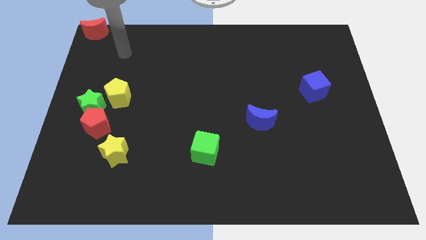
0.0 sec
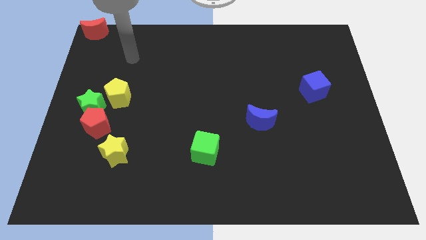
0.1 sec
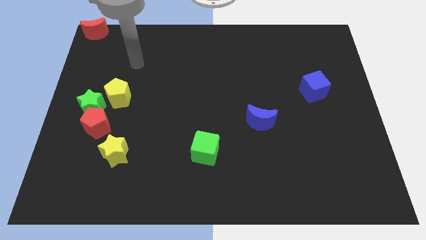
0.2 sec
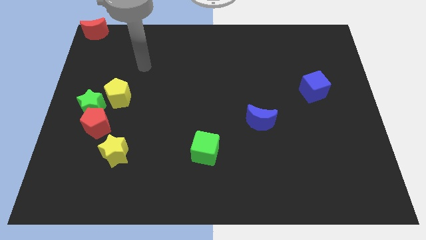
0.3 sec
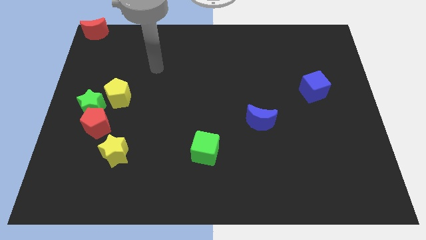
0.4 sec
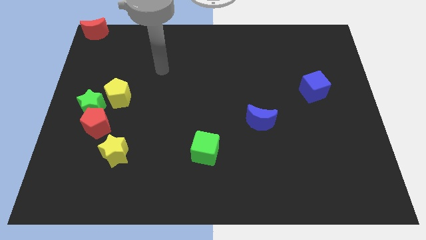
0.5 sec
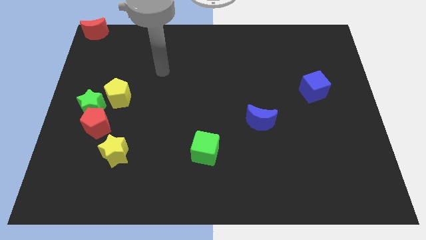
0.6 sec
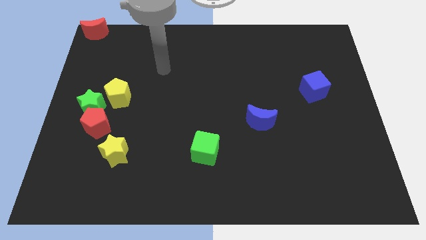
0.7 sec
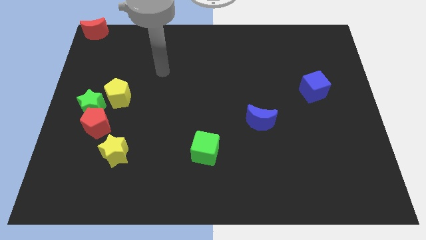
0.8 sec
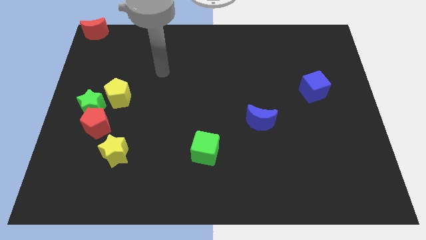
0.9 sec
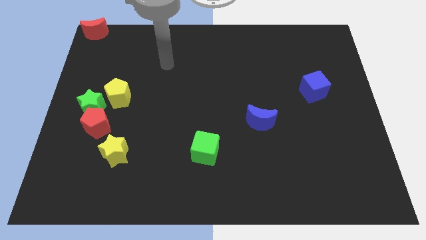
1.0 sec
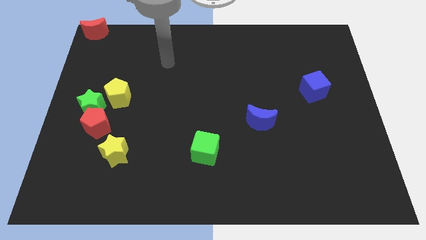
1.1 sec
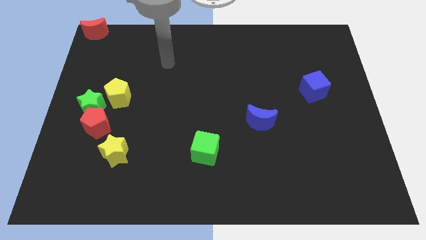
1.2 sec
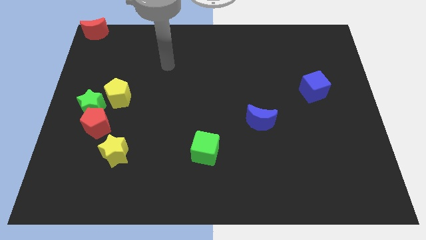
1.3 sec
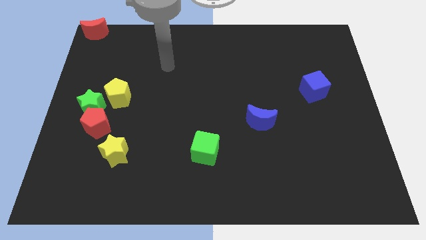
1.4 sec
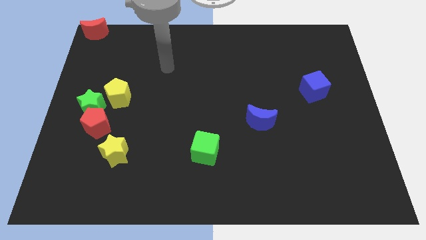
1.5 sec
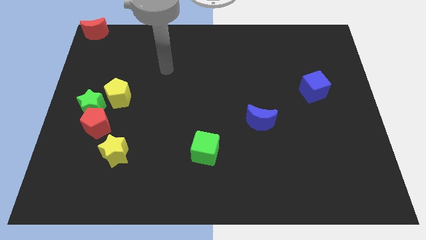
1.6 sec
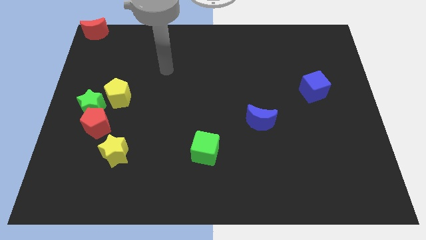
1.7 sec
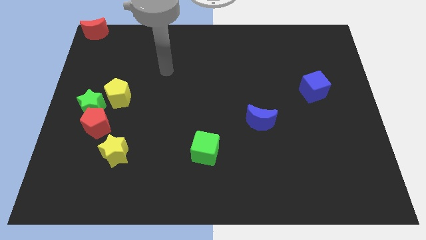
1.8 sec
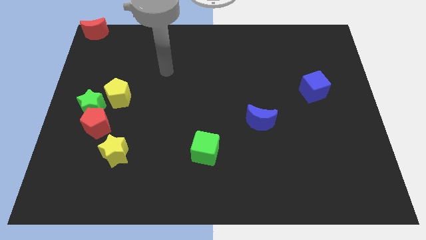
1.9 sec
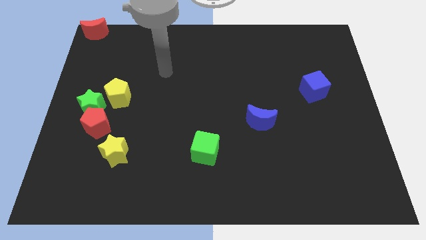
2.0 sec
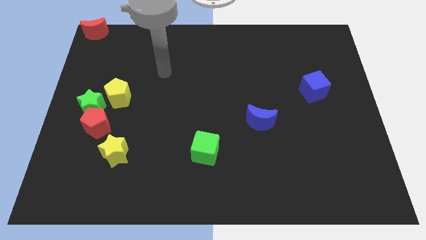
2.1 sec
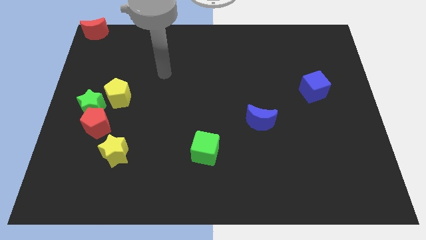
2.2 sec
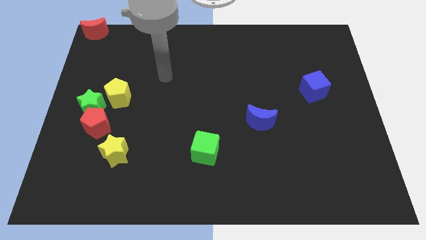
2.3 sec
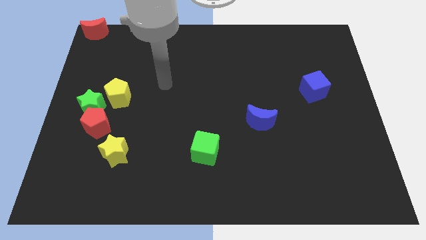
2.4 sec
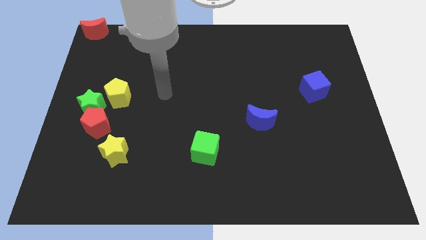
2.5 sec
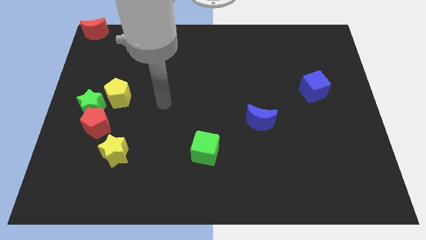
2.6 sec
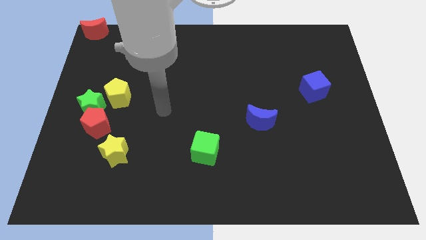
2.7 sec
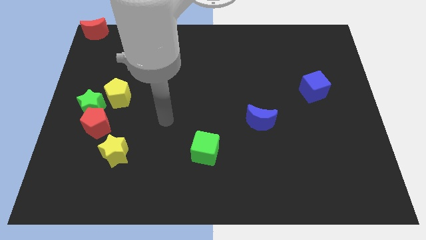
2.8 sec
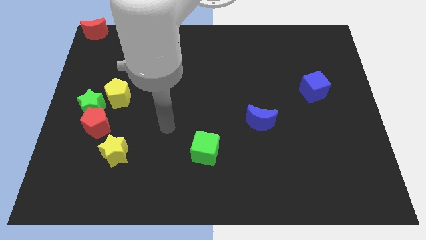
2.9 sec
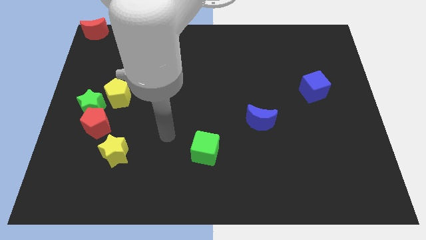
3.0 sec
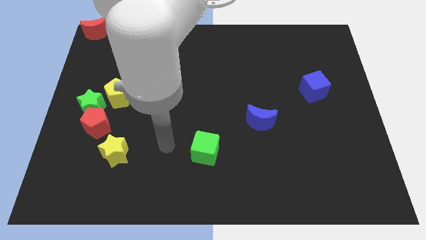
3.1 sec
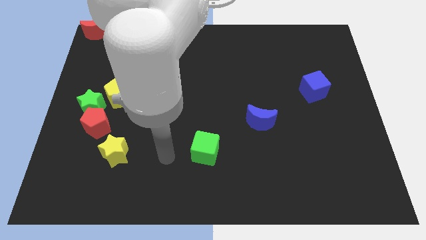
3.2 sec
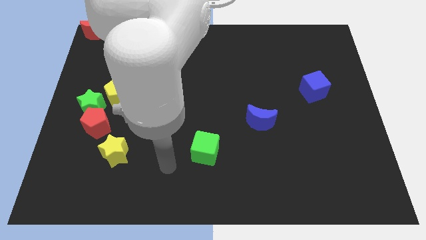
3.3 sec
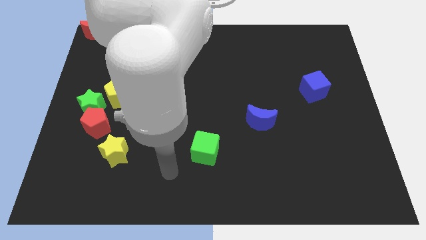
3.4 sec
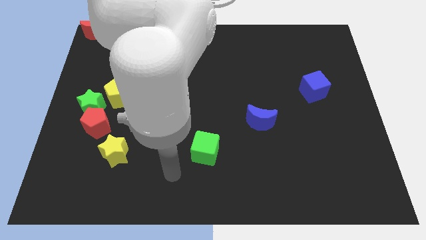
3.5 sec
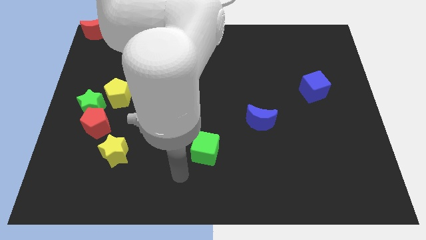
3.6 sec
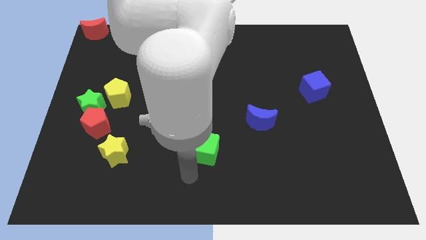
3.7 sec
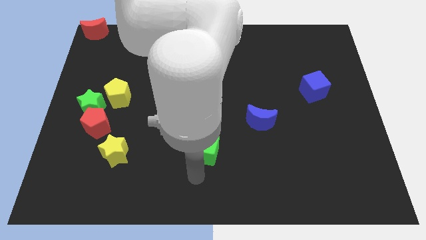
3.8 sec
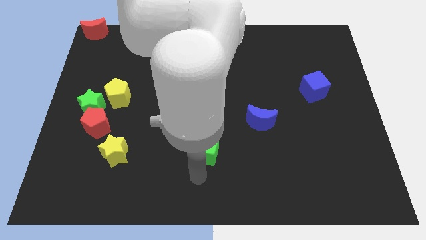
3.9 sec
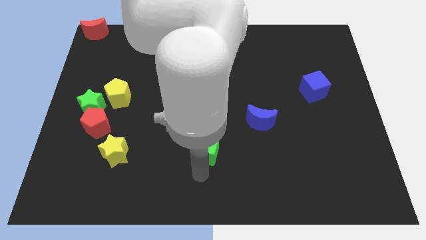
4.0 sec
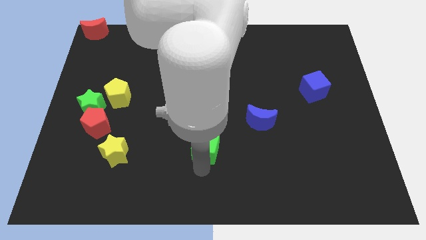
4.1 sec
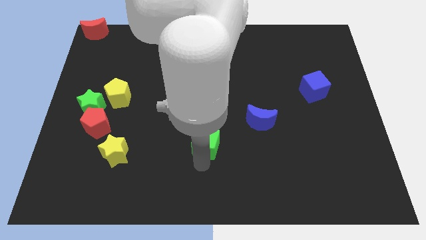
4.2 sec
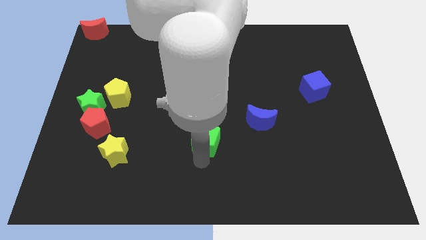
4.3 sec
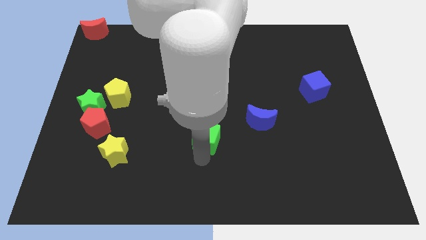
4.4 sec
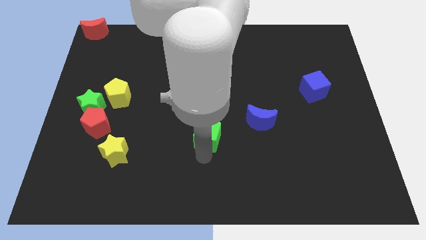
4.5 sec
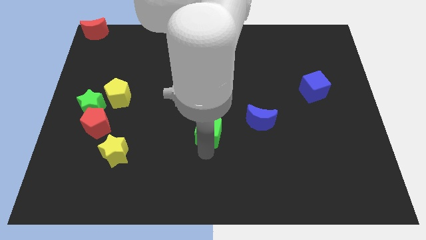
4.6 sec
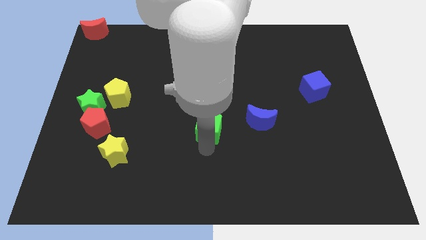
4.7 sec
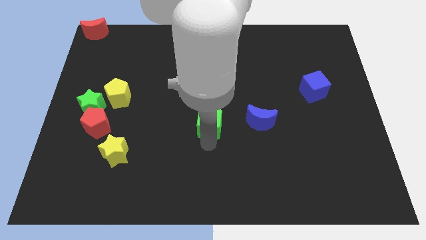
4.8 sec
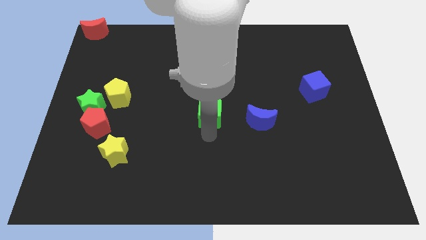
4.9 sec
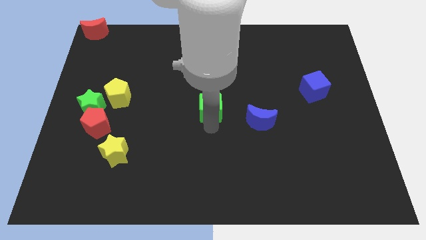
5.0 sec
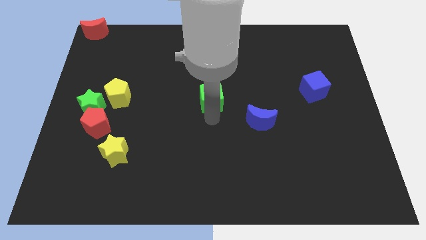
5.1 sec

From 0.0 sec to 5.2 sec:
push the green cube to the center of the board

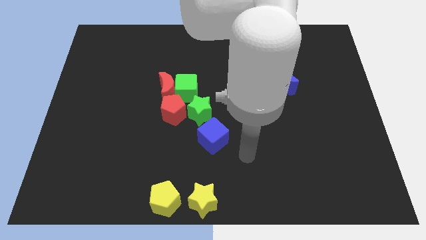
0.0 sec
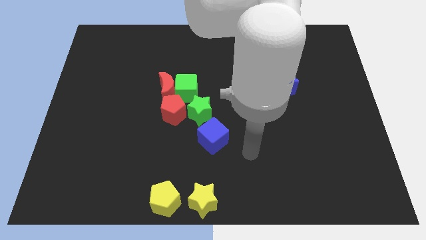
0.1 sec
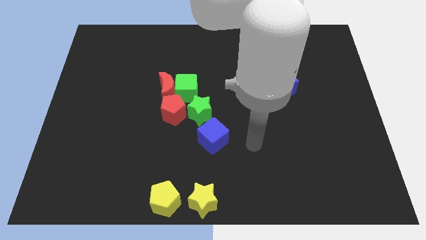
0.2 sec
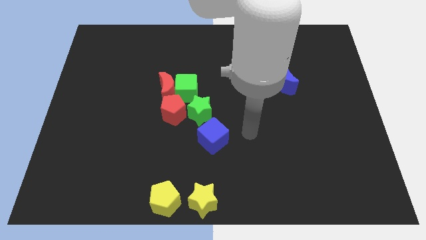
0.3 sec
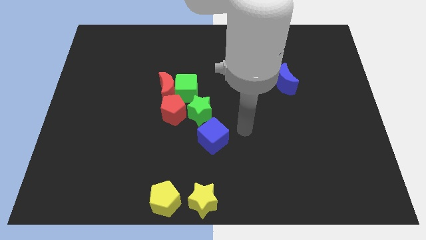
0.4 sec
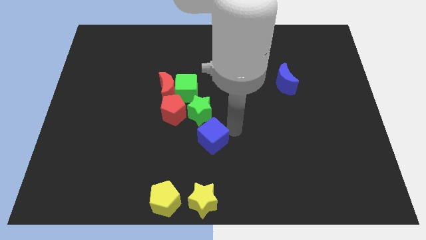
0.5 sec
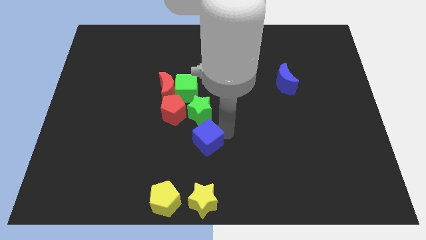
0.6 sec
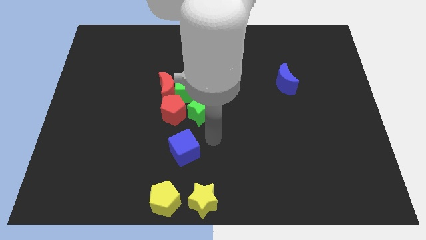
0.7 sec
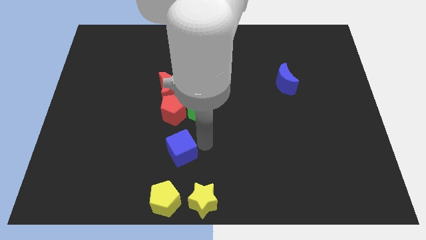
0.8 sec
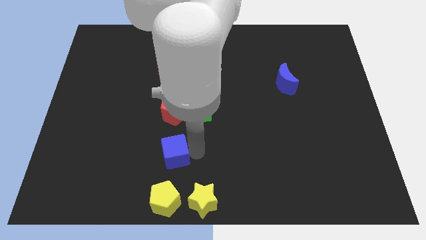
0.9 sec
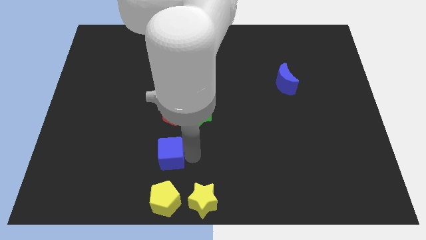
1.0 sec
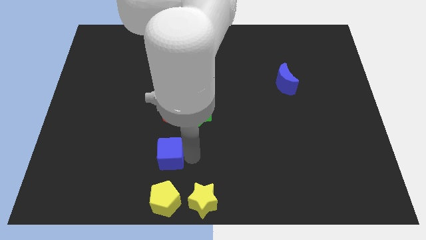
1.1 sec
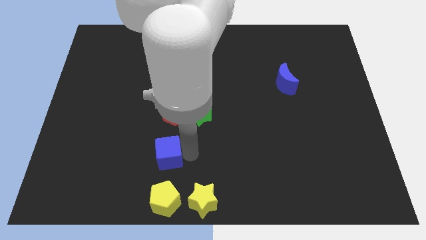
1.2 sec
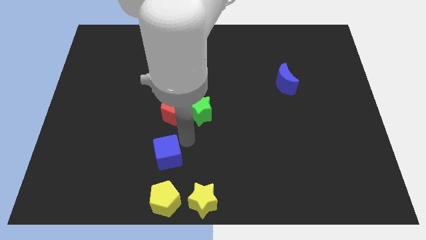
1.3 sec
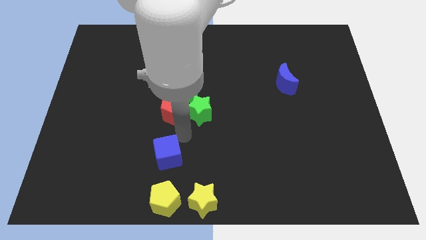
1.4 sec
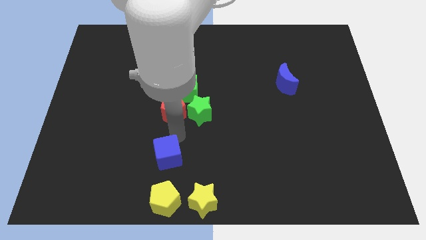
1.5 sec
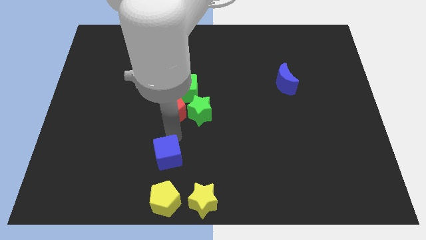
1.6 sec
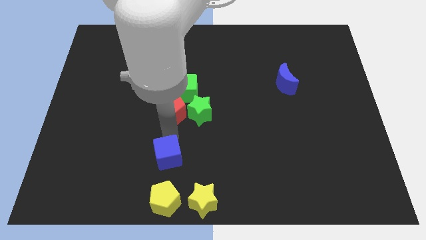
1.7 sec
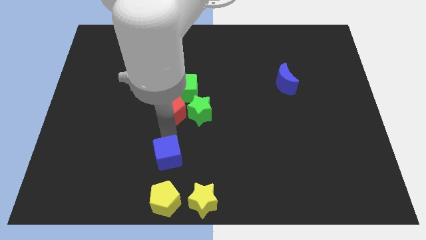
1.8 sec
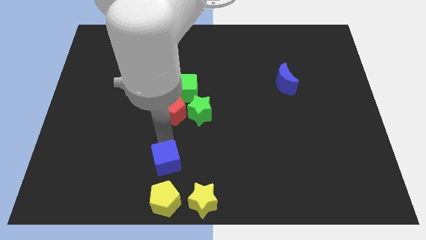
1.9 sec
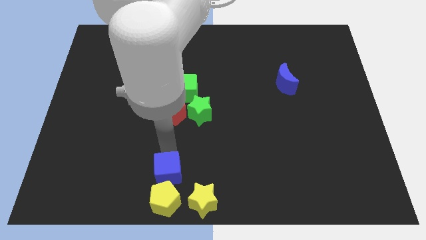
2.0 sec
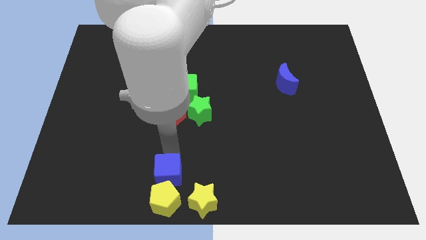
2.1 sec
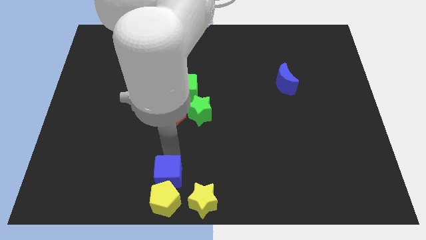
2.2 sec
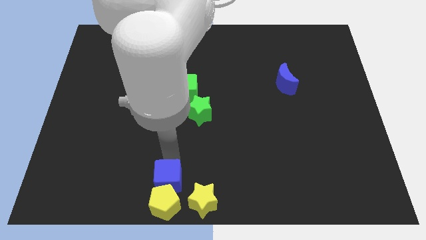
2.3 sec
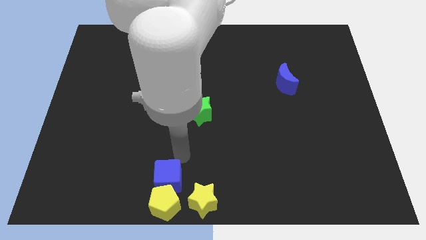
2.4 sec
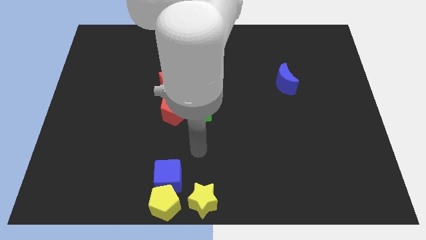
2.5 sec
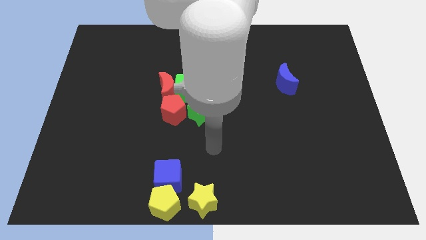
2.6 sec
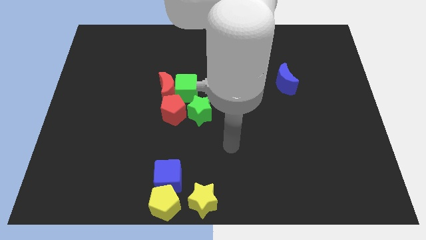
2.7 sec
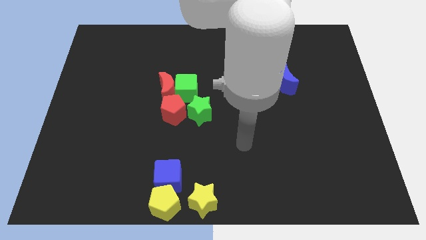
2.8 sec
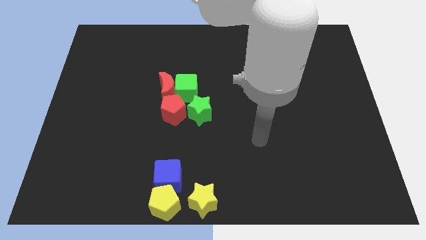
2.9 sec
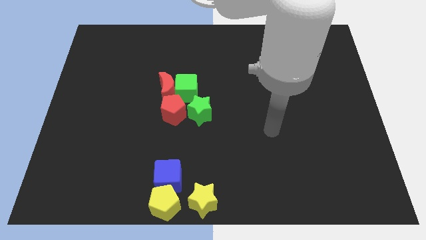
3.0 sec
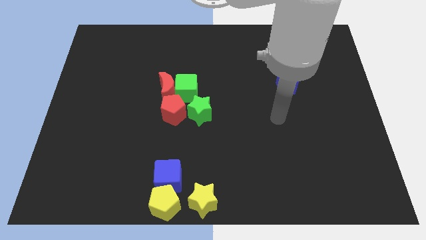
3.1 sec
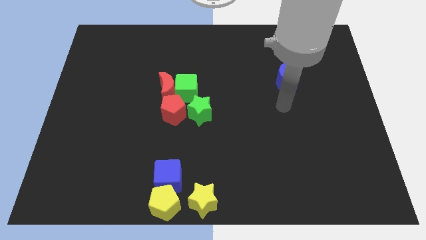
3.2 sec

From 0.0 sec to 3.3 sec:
move the blue cube to the top of the yellow pentagon

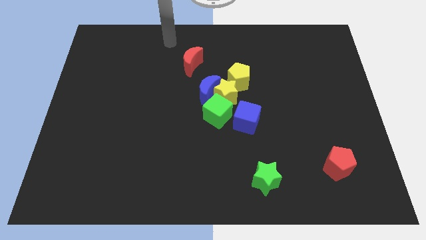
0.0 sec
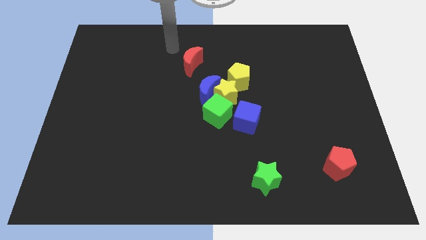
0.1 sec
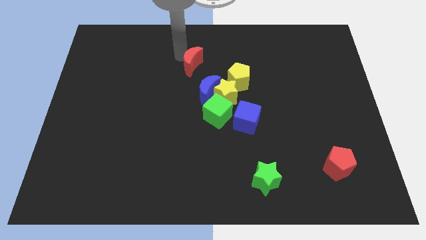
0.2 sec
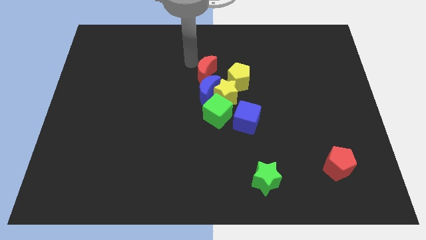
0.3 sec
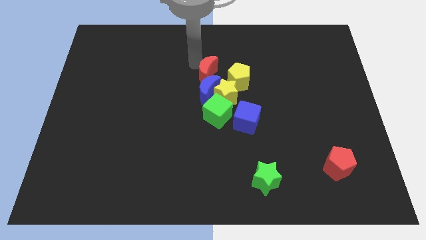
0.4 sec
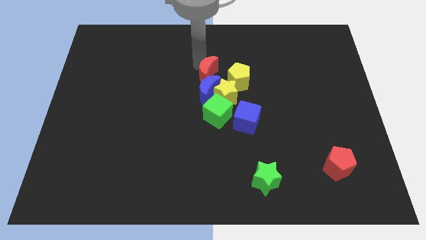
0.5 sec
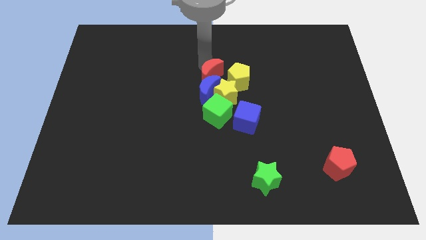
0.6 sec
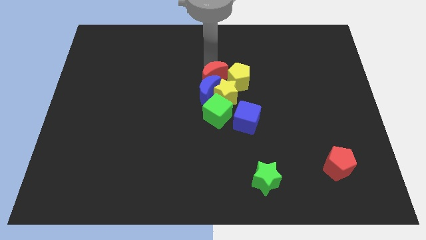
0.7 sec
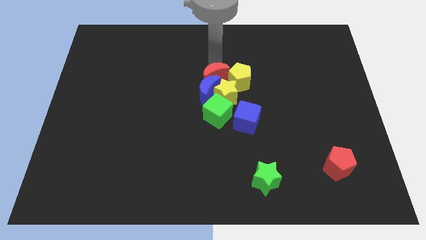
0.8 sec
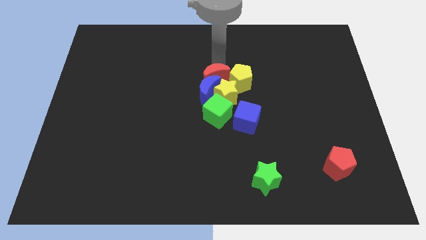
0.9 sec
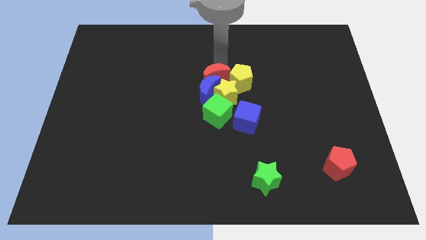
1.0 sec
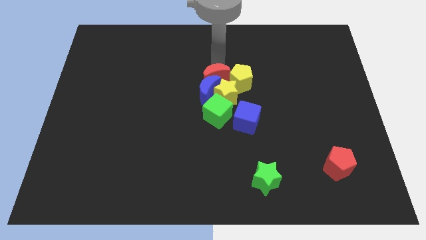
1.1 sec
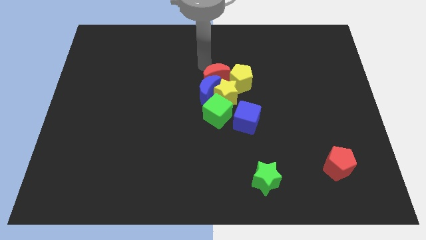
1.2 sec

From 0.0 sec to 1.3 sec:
move the red crescent above the blue crescent
